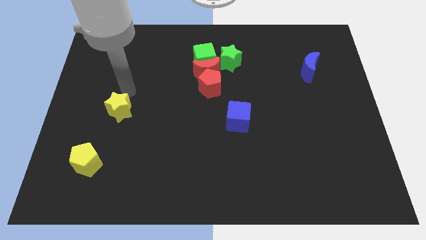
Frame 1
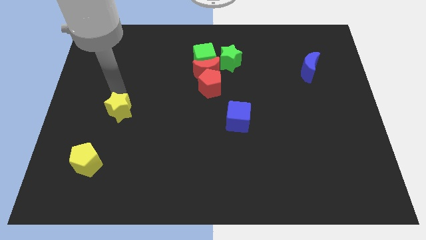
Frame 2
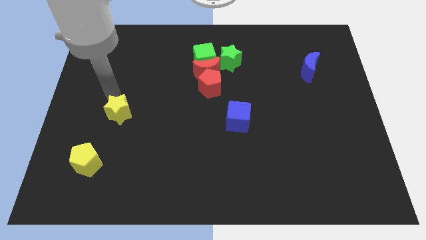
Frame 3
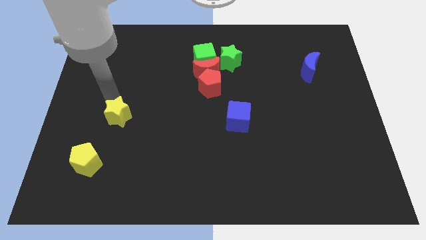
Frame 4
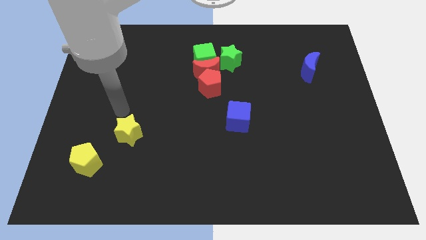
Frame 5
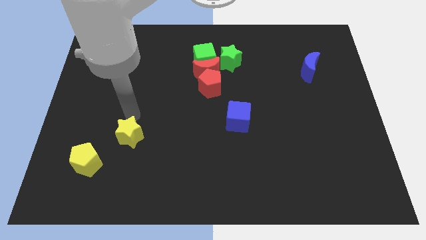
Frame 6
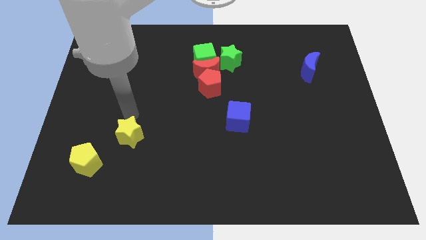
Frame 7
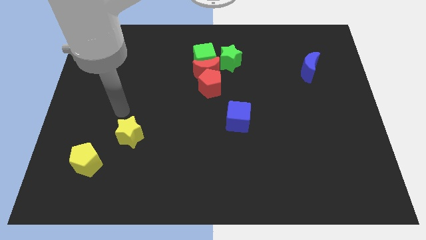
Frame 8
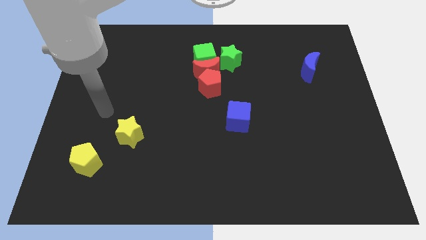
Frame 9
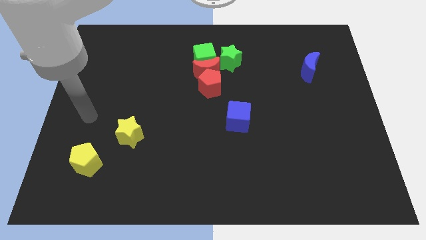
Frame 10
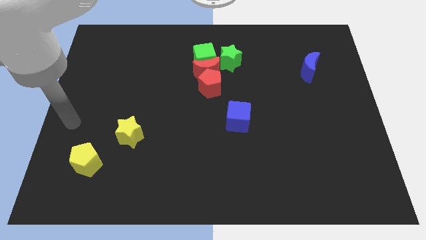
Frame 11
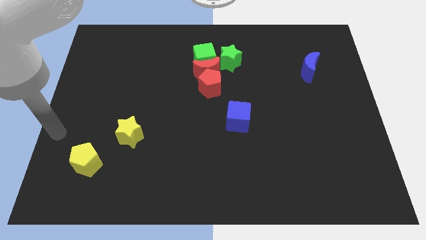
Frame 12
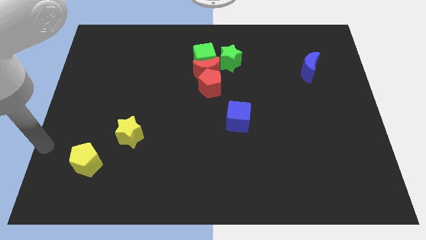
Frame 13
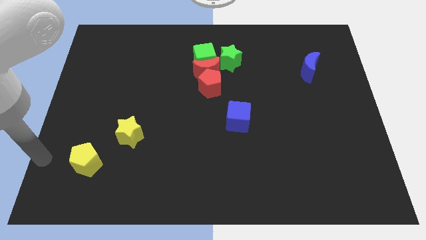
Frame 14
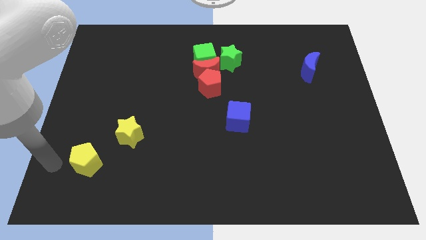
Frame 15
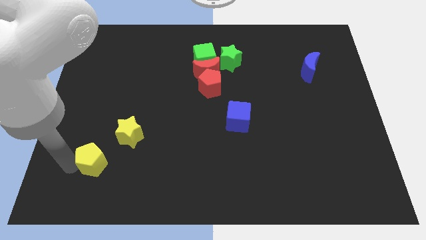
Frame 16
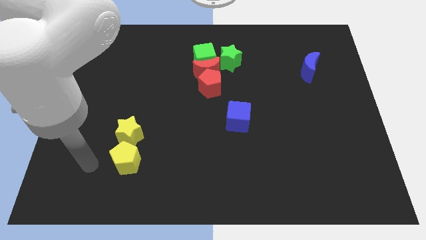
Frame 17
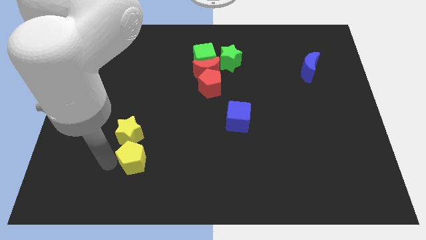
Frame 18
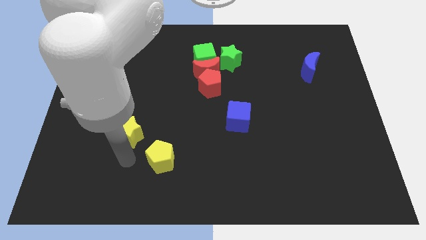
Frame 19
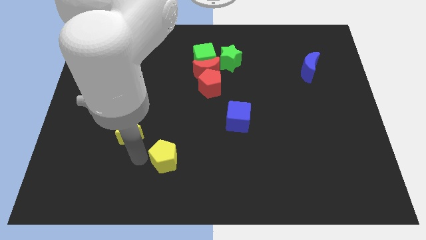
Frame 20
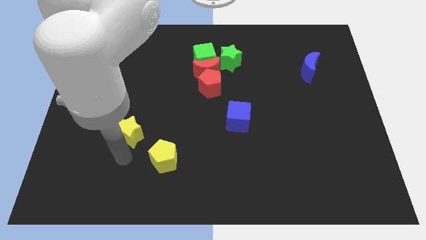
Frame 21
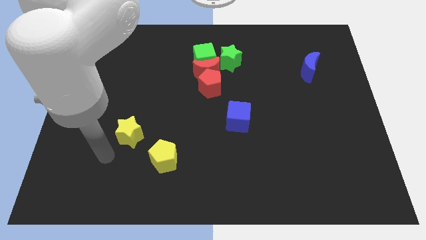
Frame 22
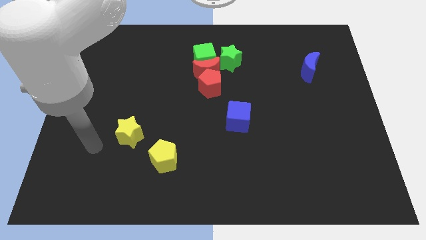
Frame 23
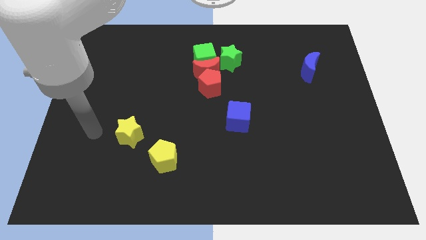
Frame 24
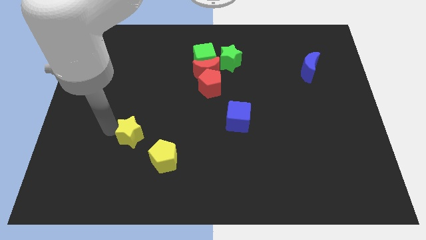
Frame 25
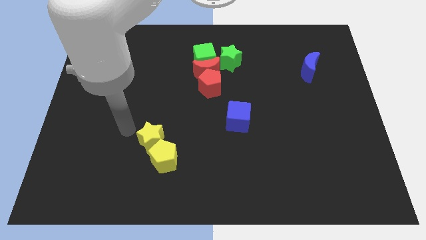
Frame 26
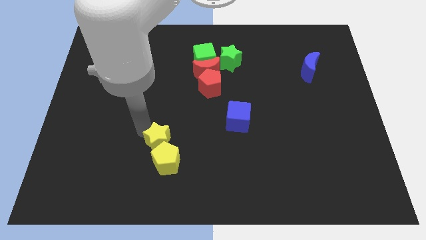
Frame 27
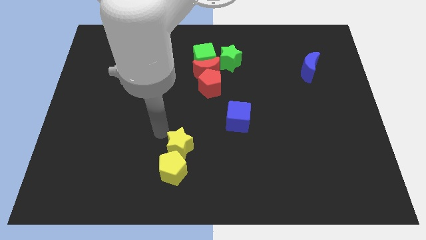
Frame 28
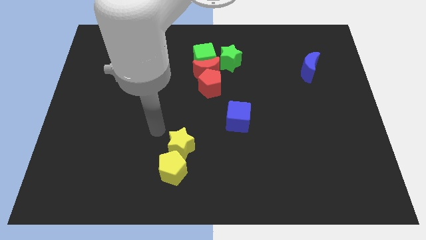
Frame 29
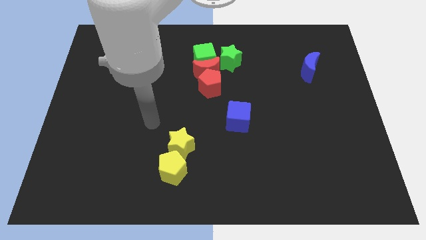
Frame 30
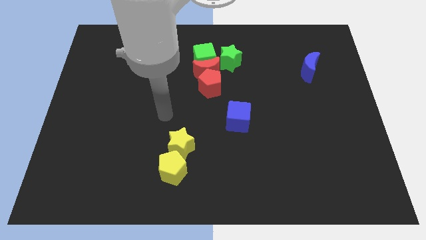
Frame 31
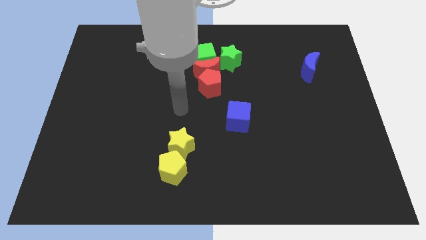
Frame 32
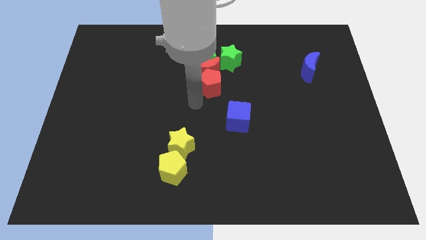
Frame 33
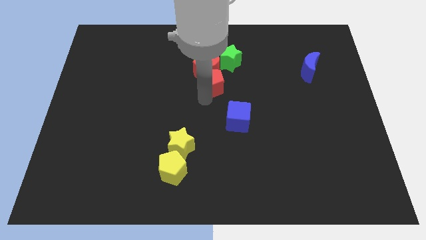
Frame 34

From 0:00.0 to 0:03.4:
push the yellow star into yellow pentagon

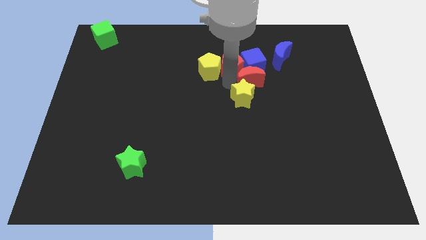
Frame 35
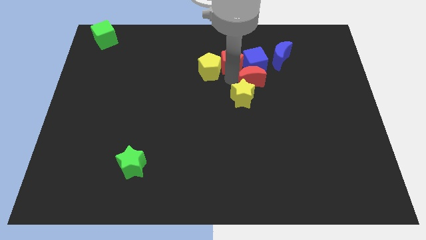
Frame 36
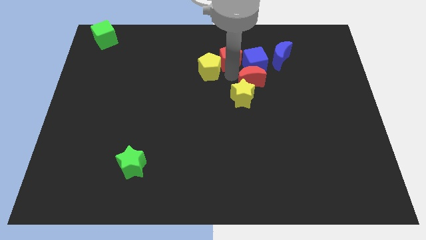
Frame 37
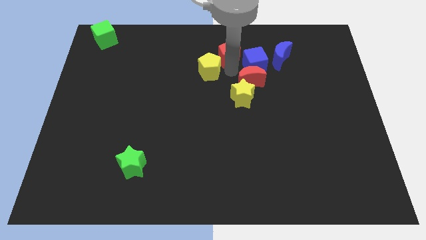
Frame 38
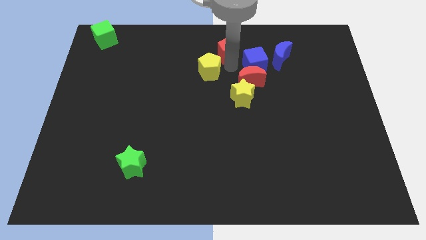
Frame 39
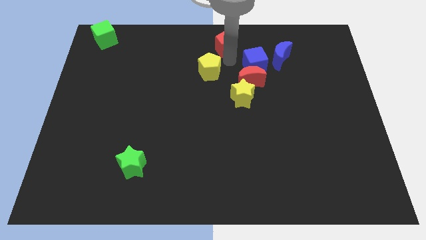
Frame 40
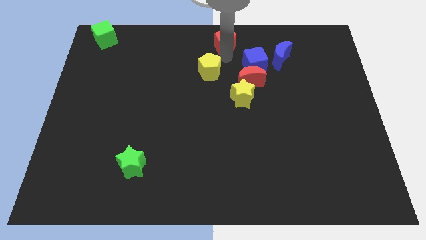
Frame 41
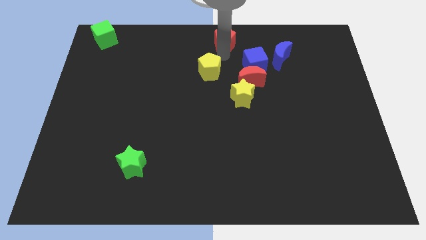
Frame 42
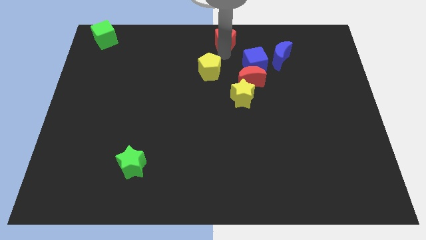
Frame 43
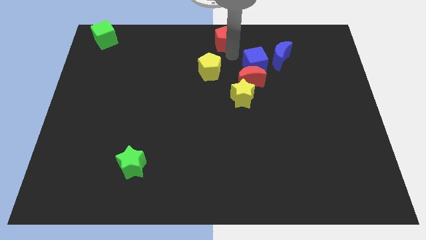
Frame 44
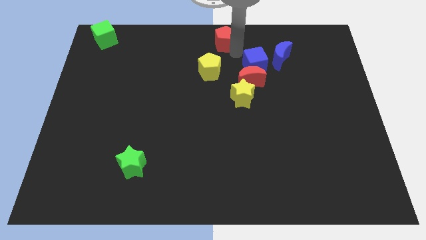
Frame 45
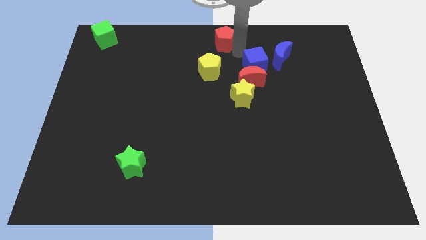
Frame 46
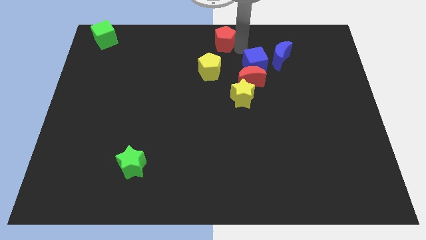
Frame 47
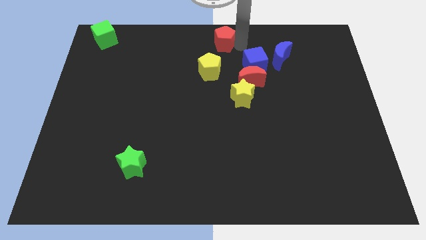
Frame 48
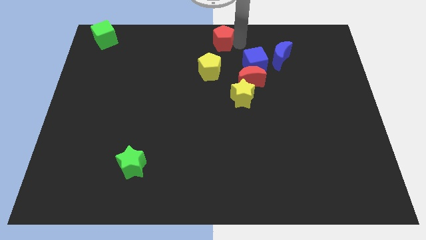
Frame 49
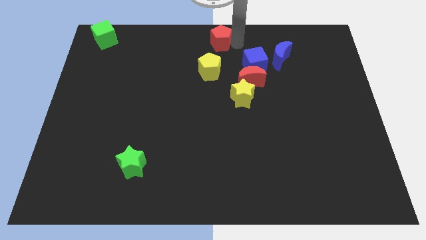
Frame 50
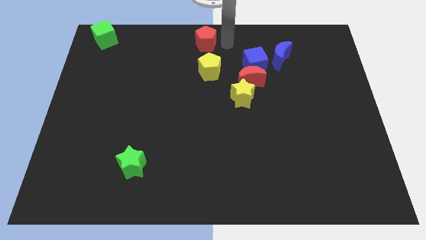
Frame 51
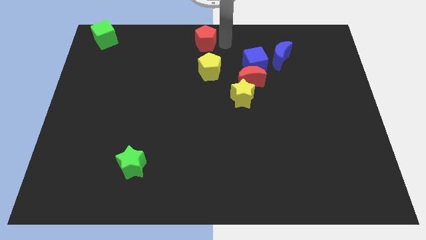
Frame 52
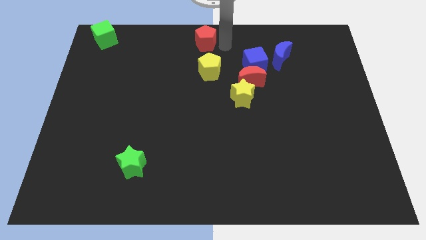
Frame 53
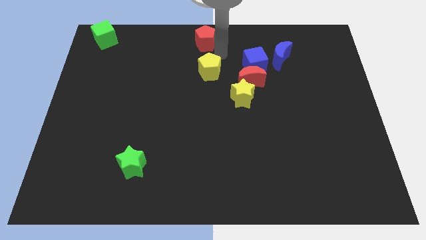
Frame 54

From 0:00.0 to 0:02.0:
move the red pentagon to the top side of the yellow pentagon

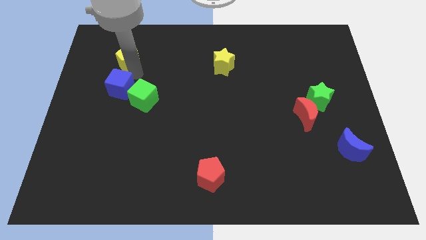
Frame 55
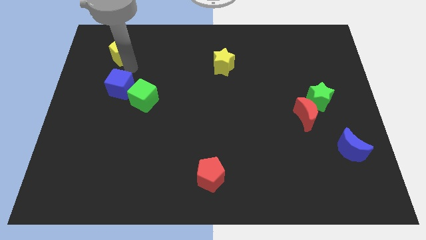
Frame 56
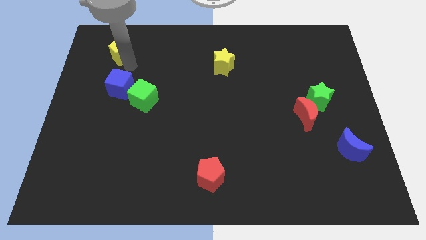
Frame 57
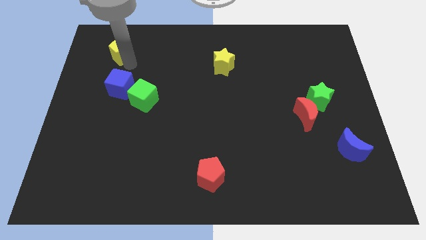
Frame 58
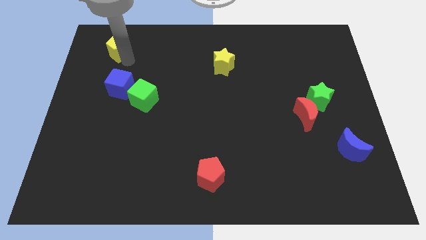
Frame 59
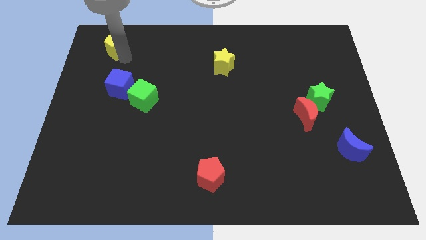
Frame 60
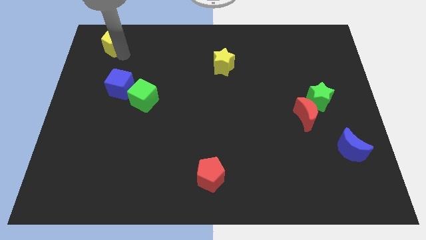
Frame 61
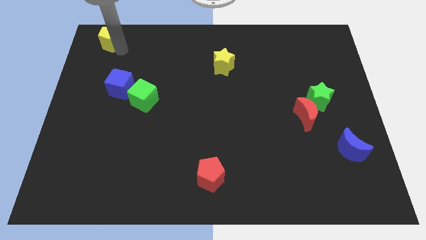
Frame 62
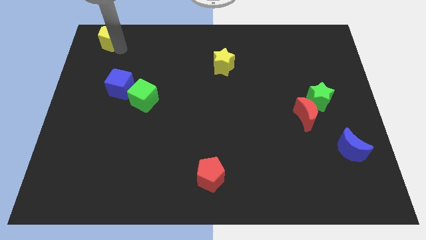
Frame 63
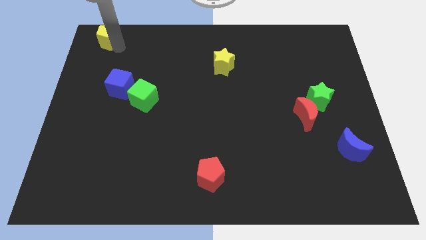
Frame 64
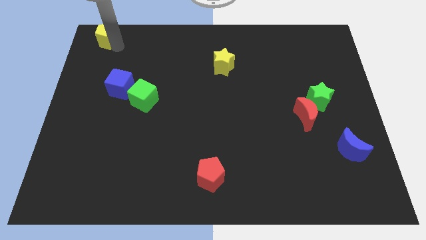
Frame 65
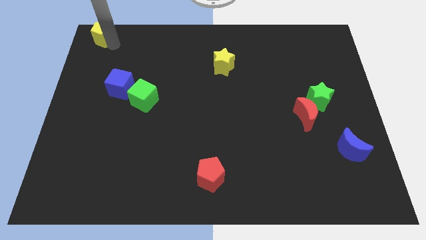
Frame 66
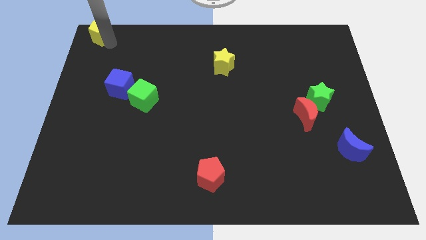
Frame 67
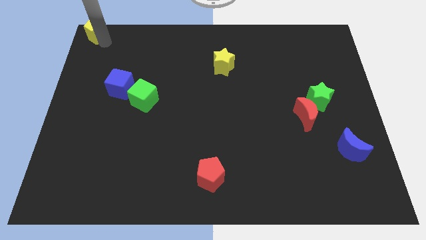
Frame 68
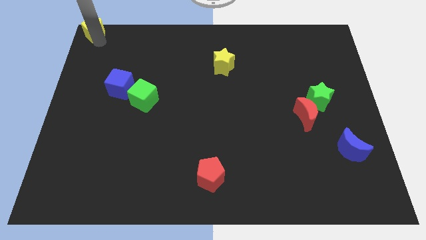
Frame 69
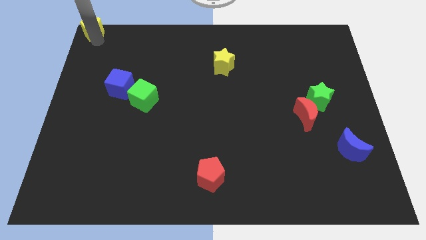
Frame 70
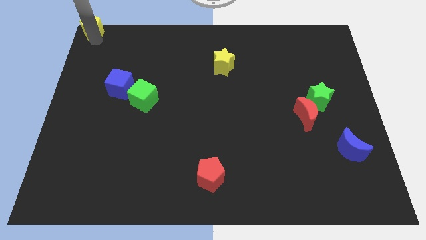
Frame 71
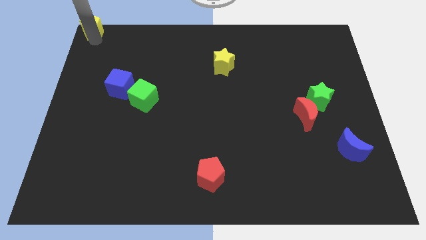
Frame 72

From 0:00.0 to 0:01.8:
push the yellow pentaon to the top corner of the board

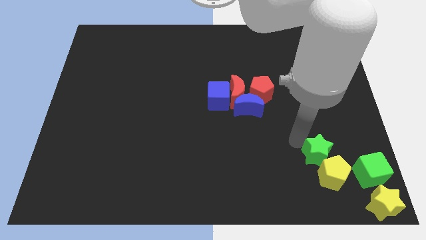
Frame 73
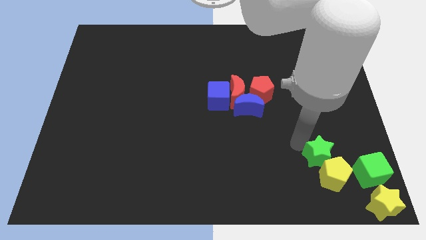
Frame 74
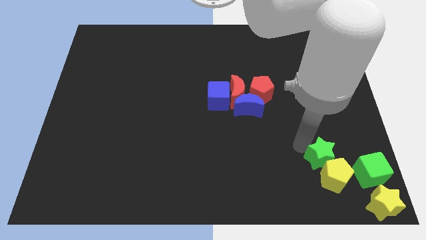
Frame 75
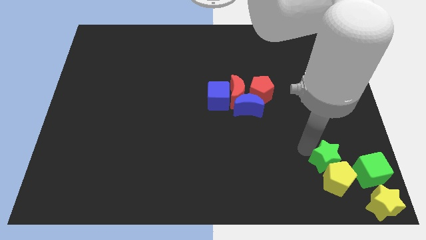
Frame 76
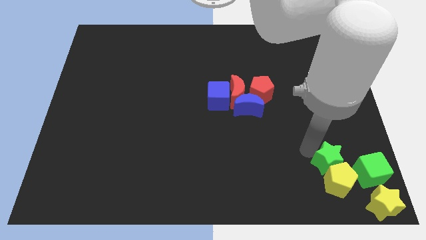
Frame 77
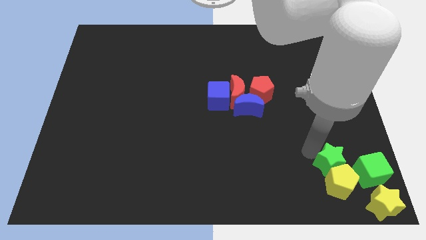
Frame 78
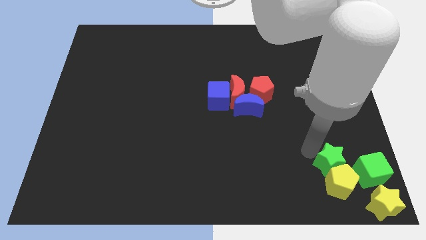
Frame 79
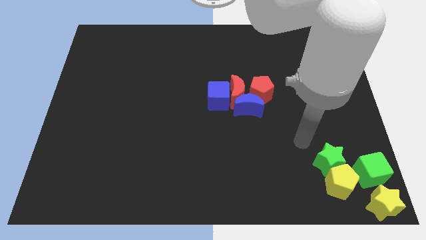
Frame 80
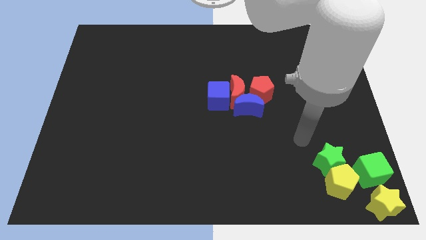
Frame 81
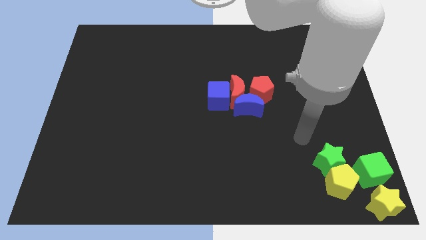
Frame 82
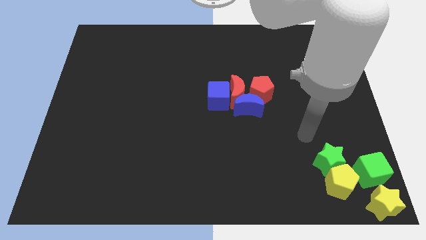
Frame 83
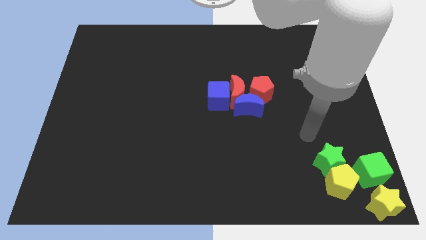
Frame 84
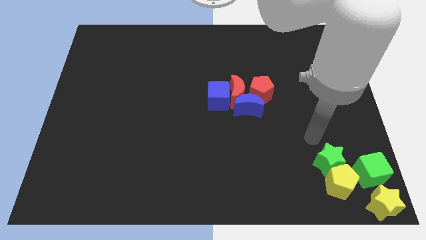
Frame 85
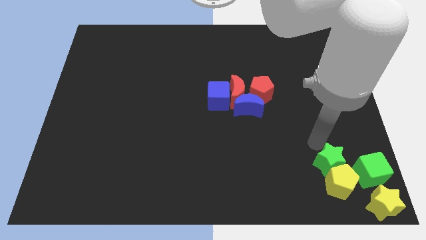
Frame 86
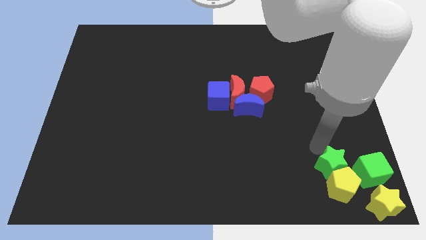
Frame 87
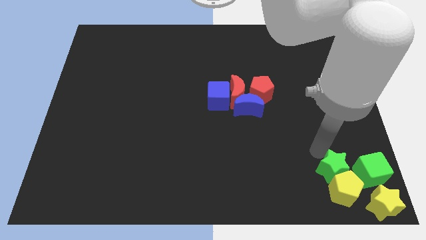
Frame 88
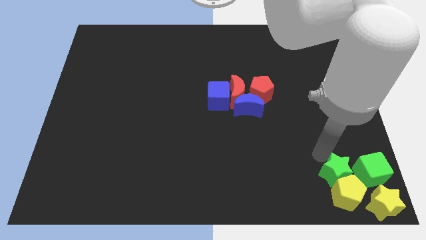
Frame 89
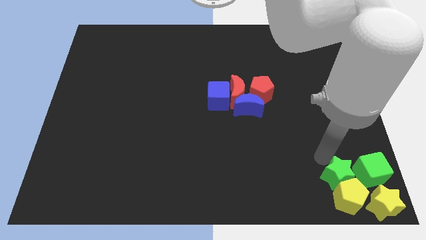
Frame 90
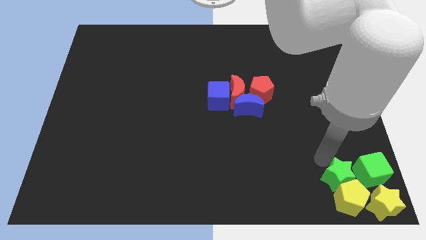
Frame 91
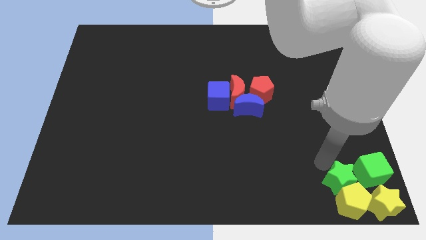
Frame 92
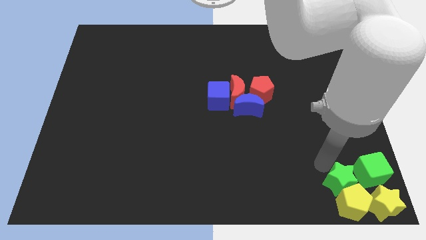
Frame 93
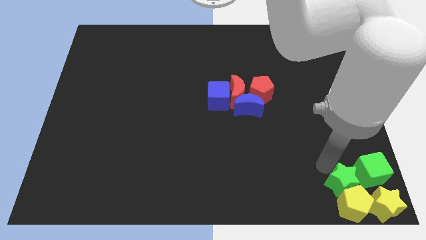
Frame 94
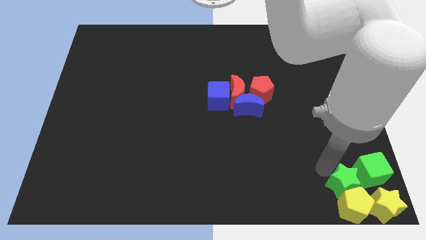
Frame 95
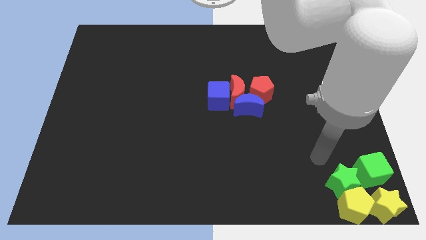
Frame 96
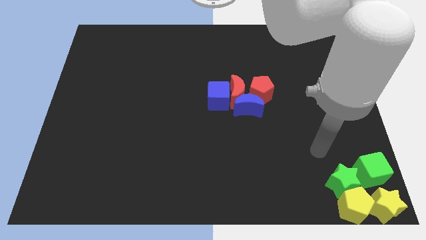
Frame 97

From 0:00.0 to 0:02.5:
move the green star and yellow pentagon to the bottom right
